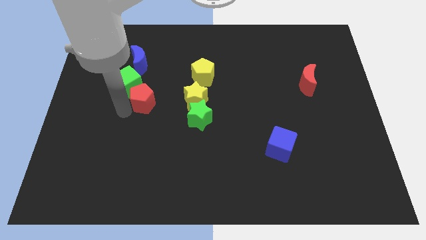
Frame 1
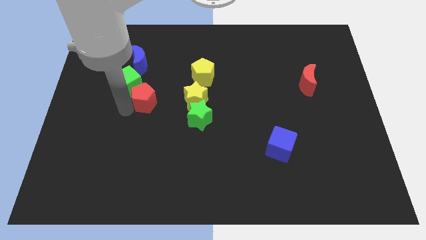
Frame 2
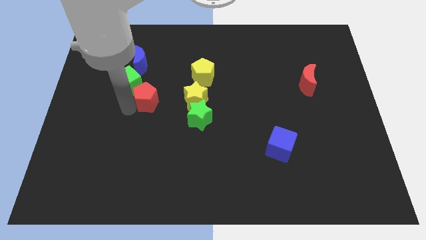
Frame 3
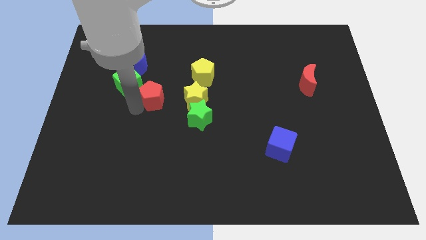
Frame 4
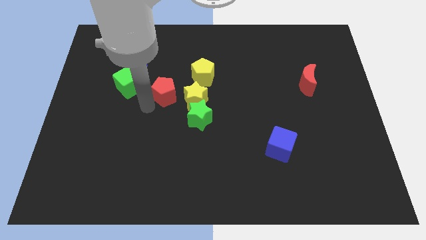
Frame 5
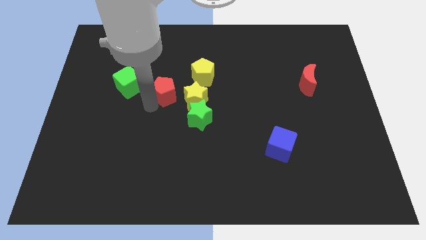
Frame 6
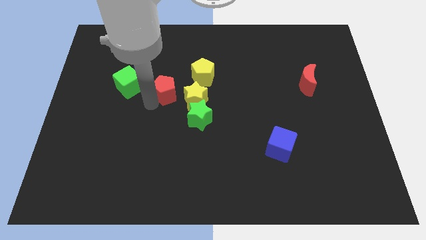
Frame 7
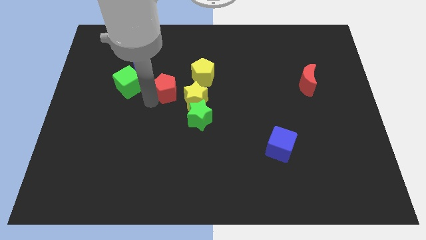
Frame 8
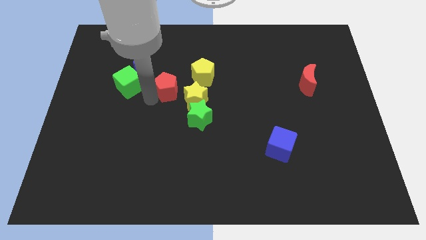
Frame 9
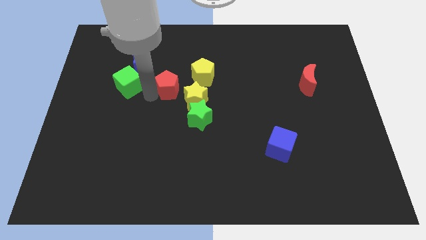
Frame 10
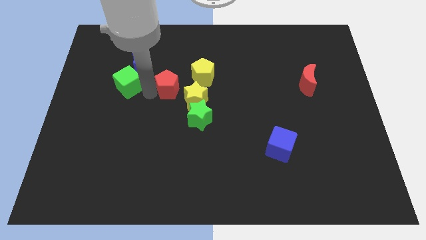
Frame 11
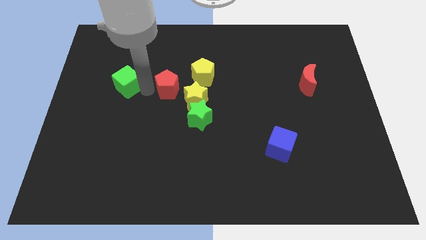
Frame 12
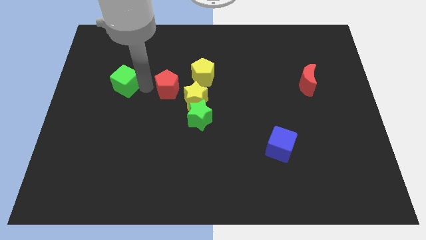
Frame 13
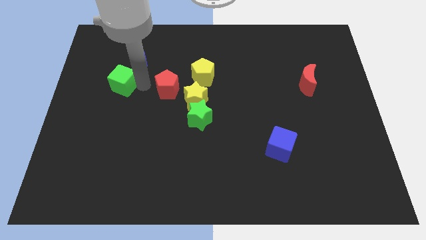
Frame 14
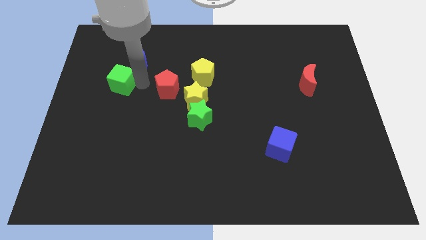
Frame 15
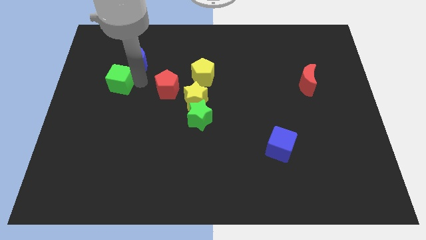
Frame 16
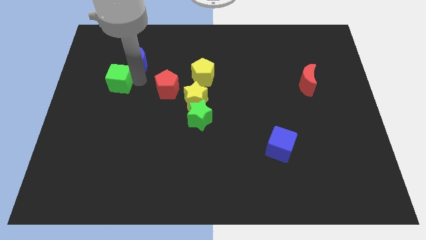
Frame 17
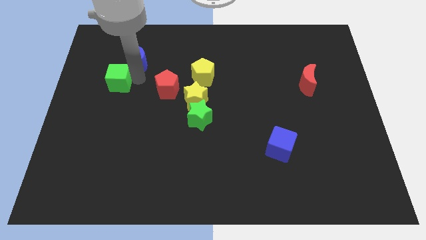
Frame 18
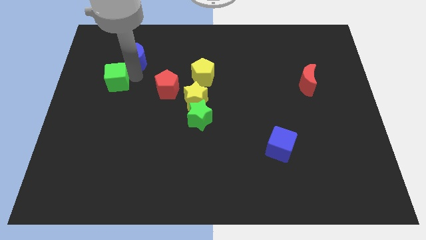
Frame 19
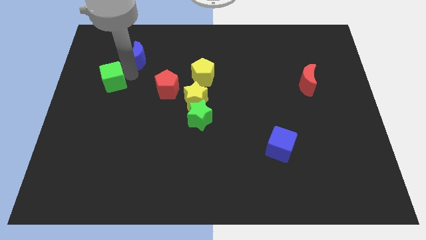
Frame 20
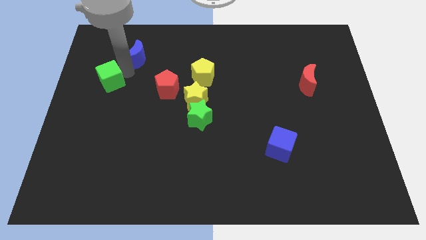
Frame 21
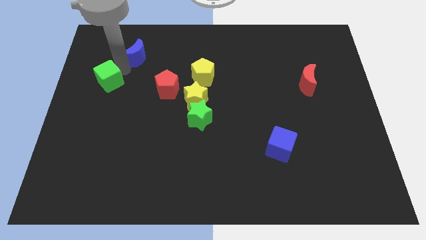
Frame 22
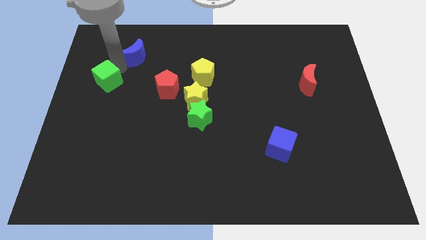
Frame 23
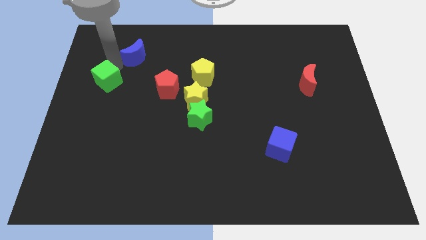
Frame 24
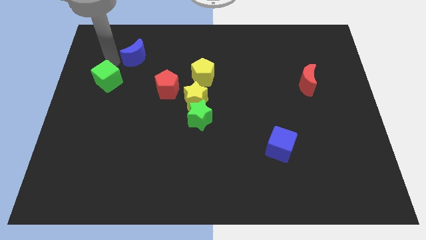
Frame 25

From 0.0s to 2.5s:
separate the red pentagon and green cube

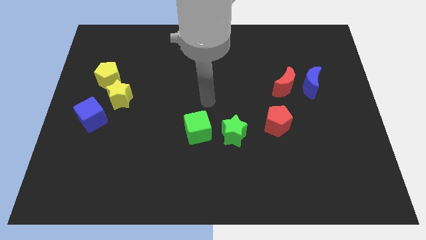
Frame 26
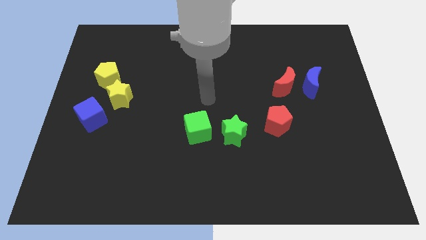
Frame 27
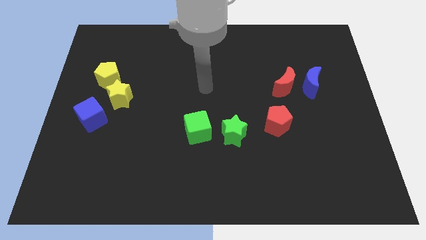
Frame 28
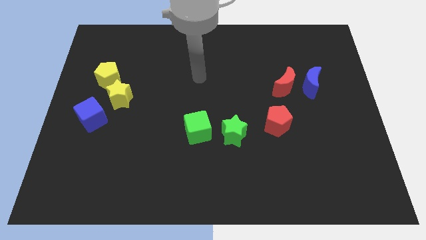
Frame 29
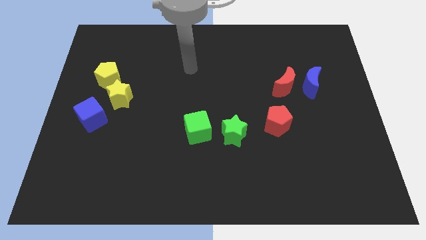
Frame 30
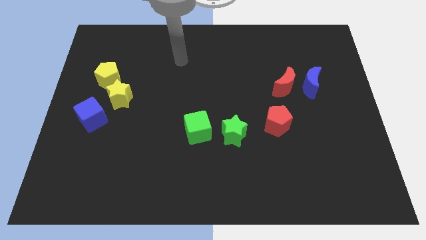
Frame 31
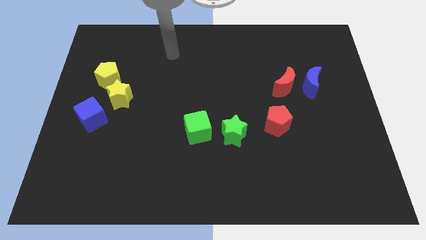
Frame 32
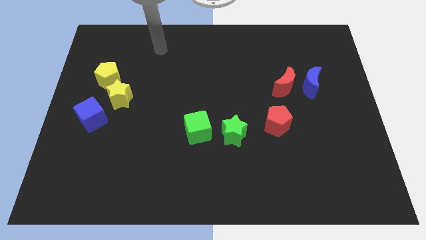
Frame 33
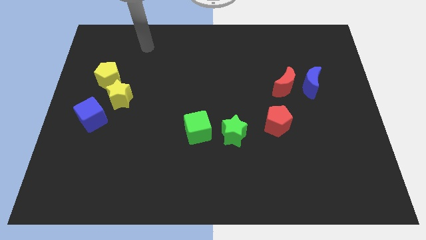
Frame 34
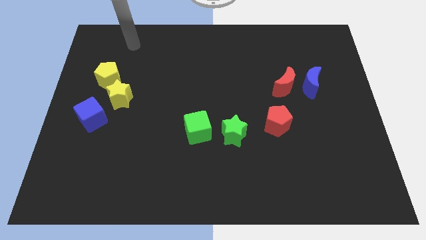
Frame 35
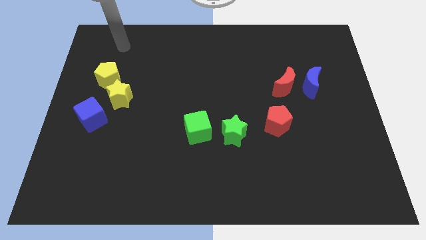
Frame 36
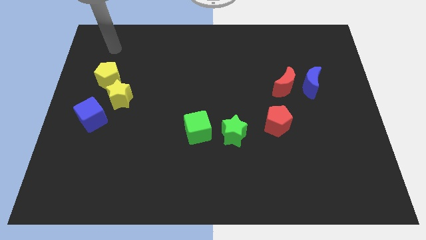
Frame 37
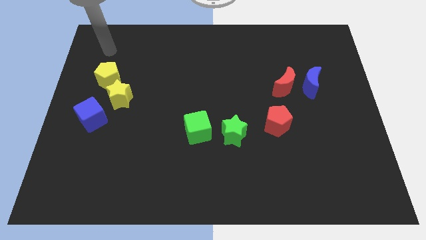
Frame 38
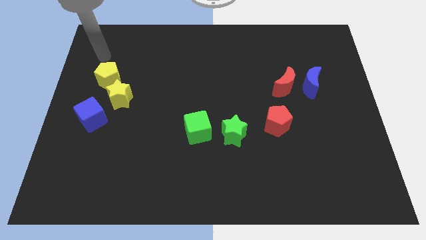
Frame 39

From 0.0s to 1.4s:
move away from the green cube

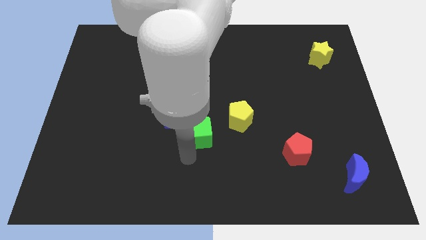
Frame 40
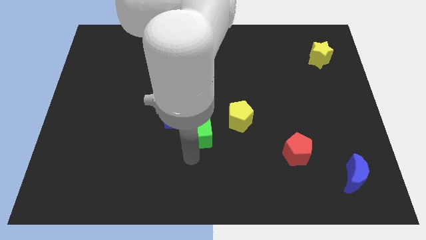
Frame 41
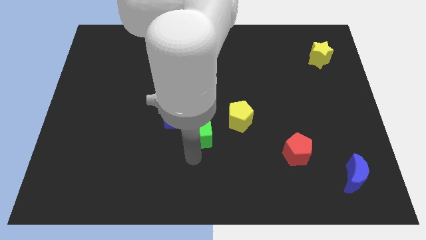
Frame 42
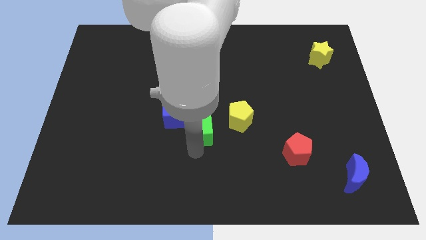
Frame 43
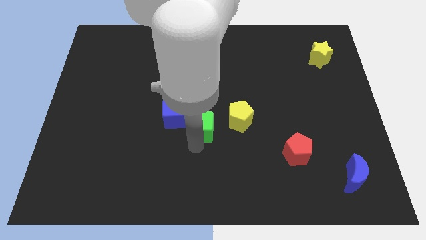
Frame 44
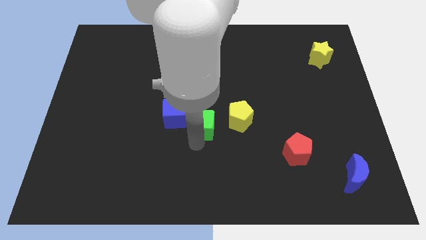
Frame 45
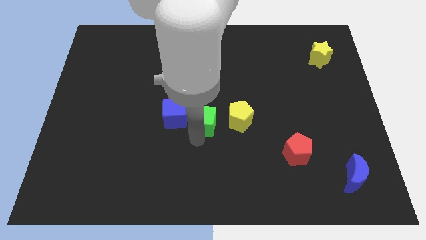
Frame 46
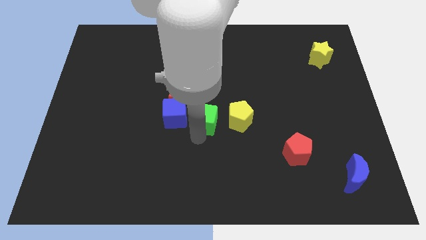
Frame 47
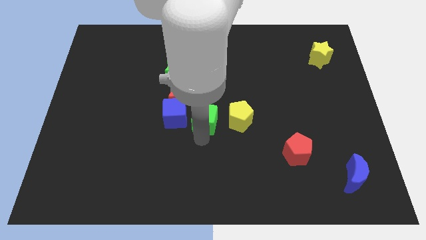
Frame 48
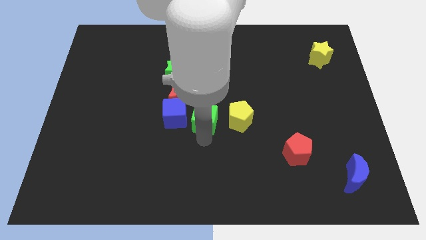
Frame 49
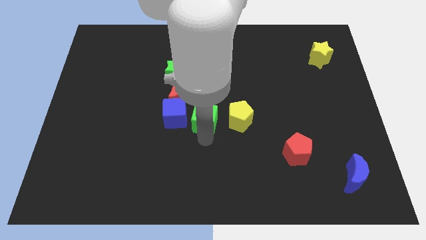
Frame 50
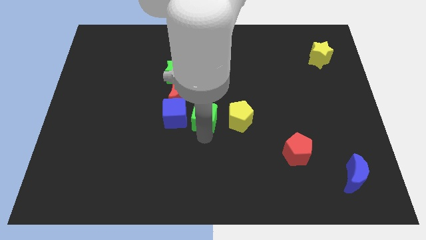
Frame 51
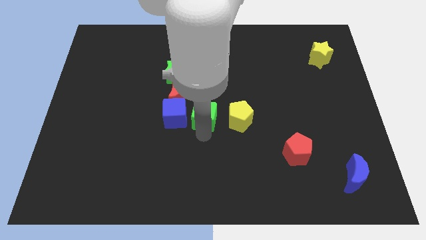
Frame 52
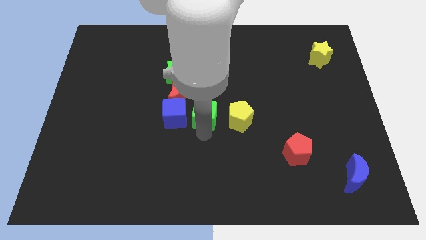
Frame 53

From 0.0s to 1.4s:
move the green cube right to the blue cube

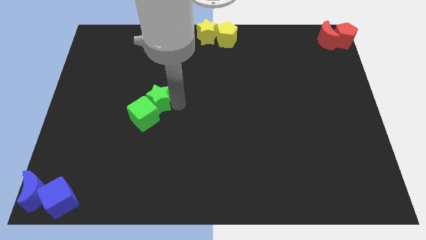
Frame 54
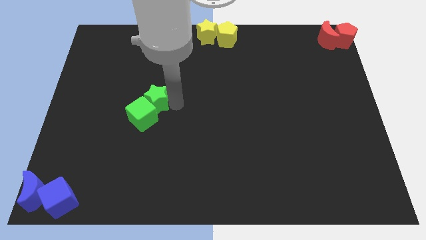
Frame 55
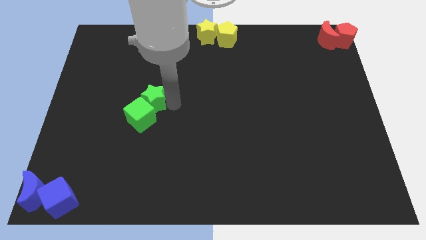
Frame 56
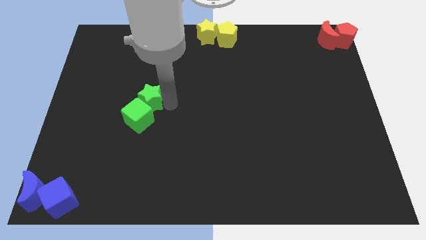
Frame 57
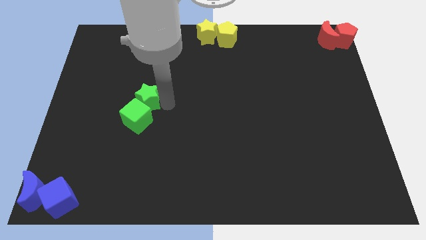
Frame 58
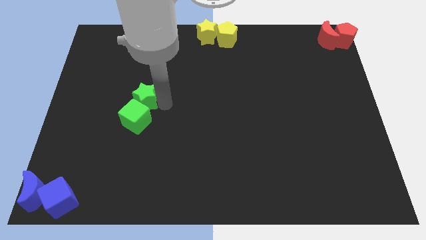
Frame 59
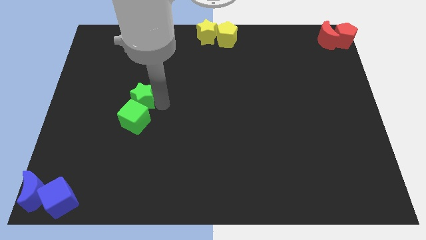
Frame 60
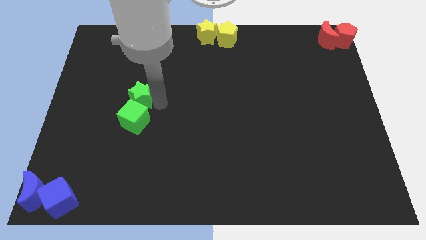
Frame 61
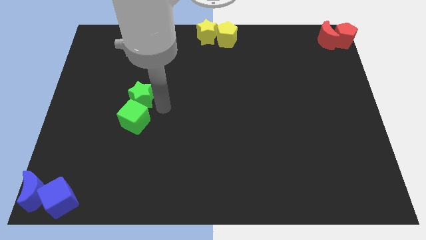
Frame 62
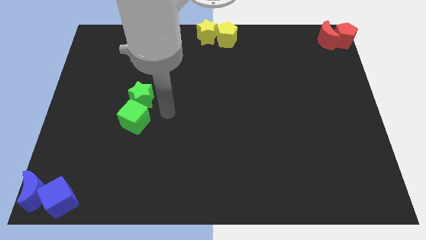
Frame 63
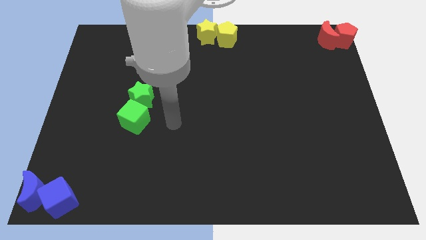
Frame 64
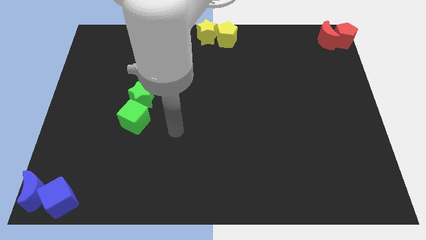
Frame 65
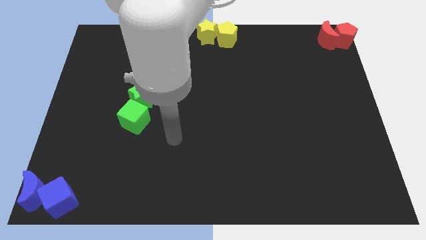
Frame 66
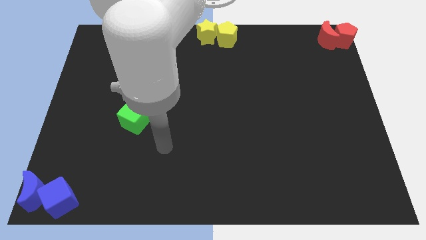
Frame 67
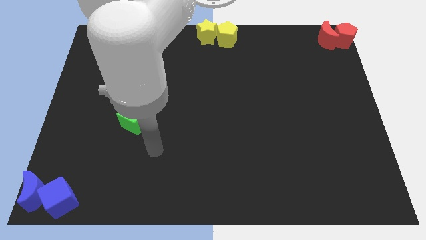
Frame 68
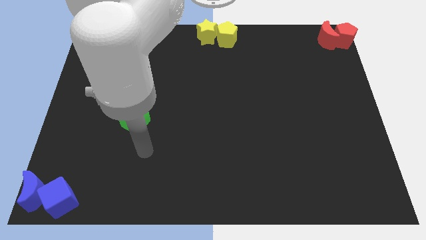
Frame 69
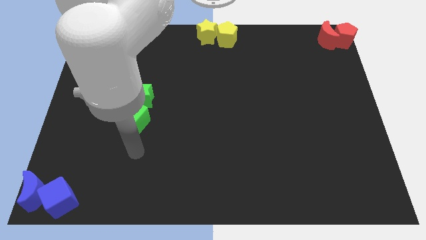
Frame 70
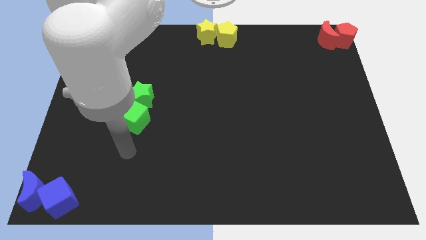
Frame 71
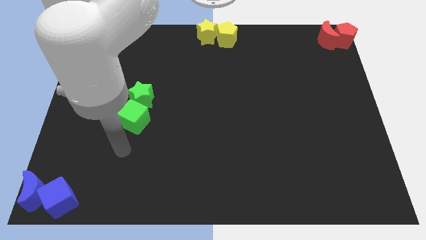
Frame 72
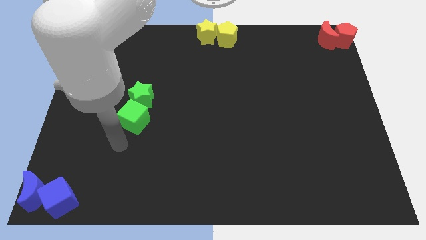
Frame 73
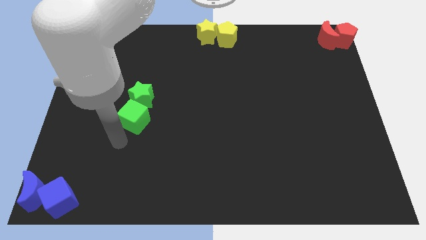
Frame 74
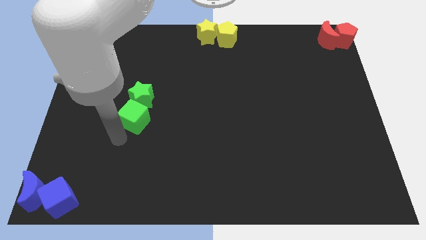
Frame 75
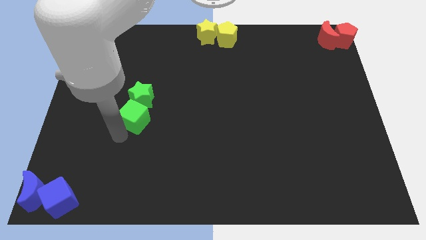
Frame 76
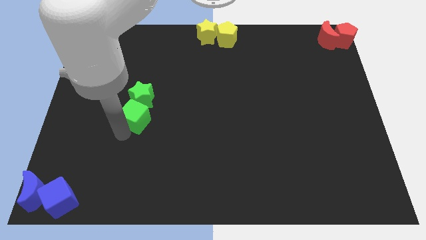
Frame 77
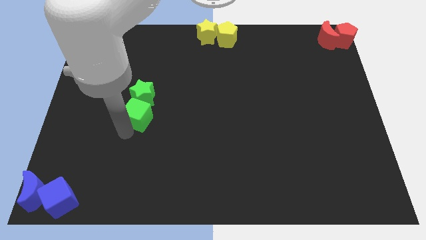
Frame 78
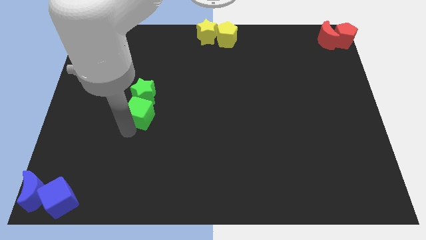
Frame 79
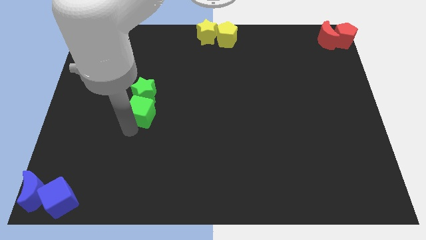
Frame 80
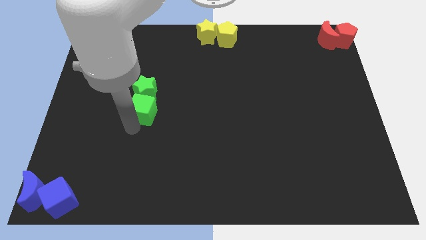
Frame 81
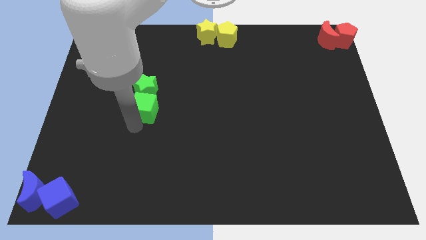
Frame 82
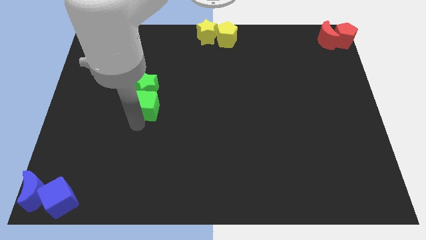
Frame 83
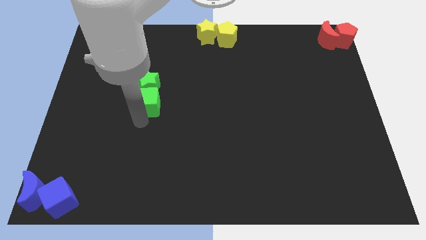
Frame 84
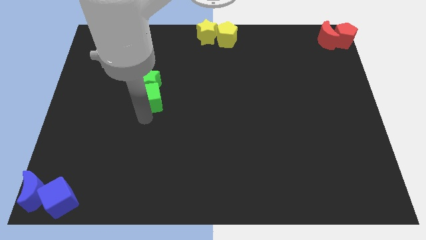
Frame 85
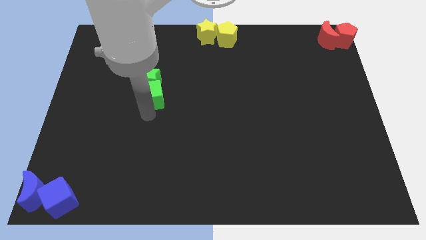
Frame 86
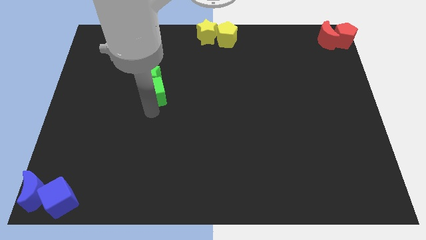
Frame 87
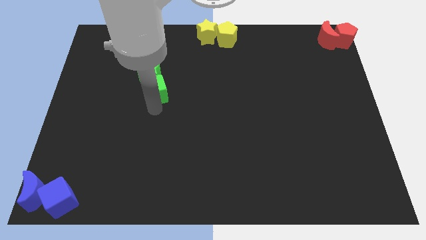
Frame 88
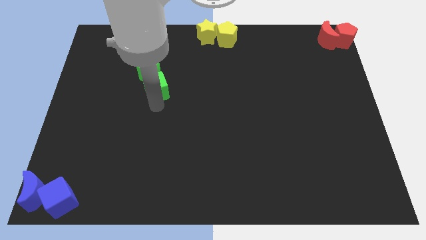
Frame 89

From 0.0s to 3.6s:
push the green star and green cube towards the top left of the board
